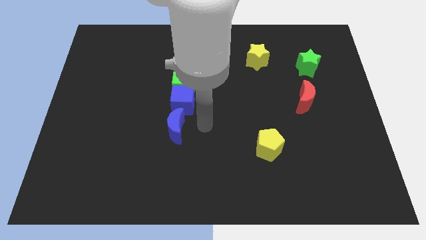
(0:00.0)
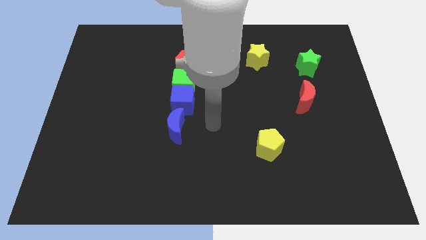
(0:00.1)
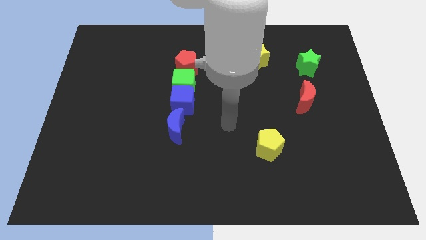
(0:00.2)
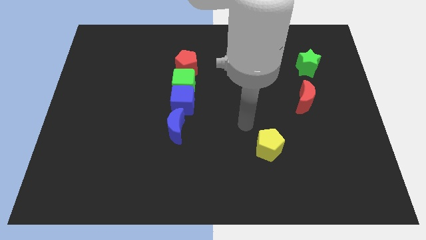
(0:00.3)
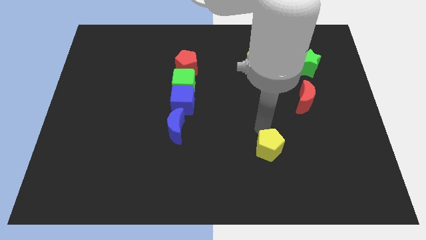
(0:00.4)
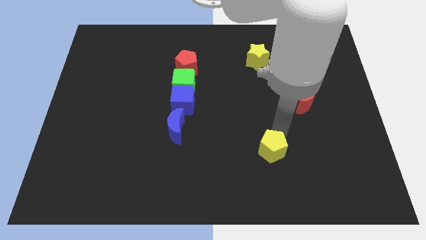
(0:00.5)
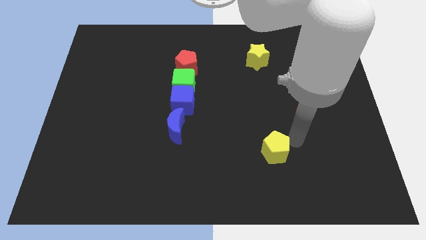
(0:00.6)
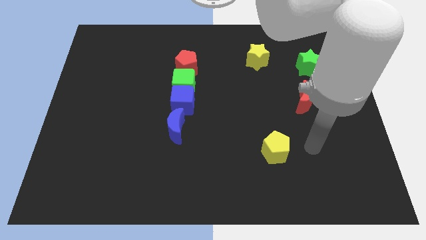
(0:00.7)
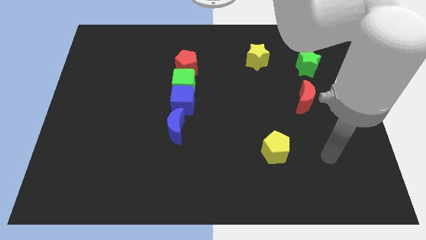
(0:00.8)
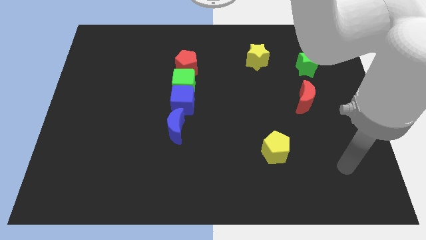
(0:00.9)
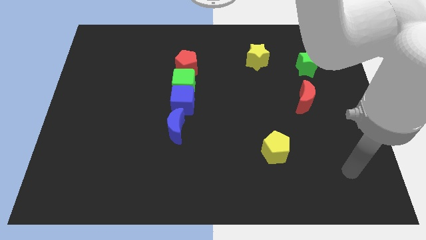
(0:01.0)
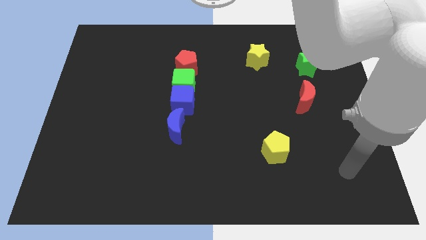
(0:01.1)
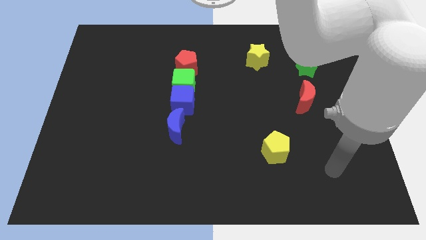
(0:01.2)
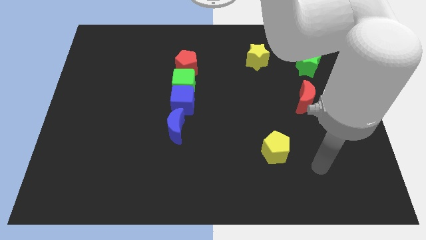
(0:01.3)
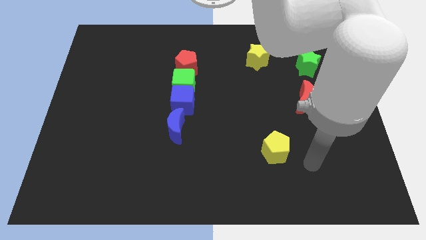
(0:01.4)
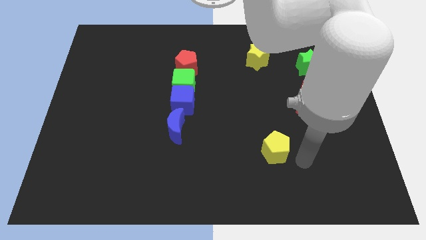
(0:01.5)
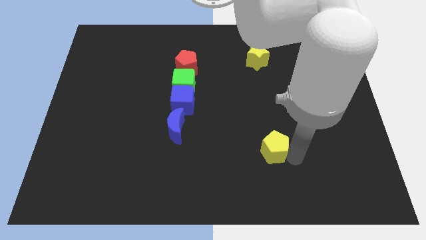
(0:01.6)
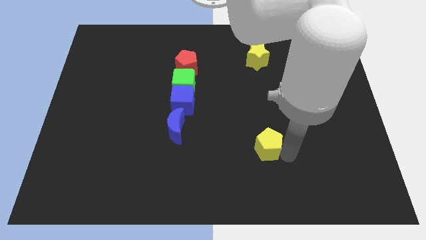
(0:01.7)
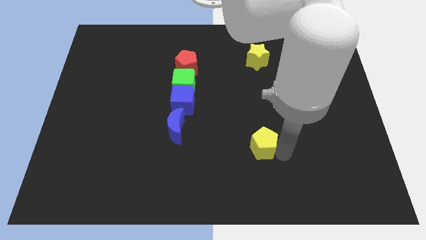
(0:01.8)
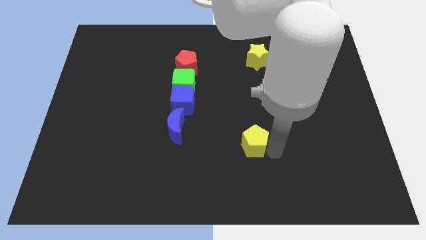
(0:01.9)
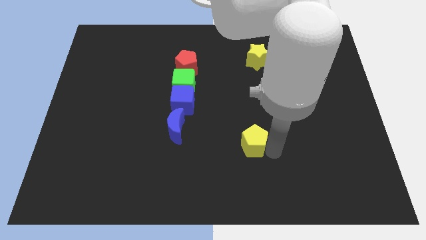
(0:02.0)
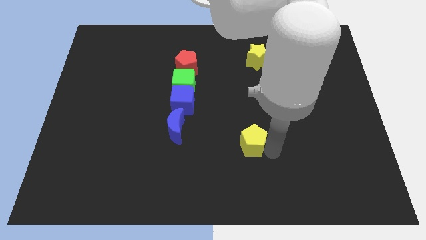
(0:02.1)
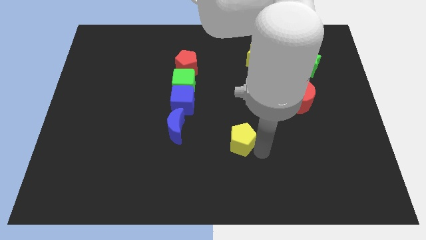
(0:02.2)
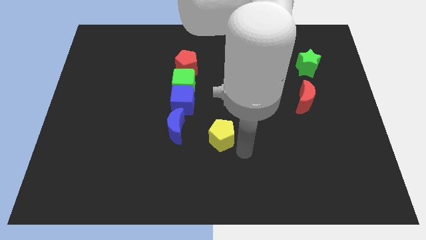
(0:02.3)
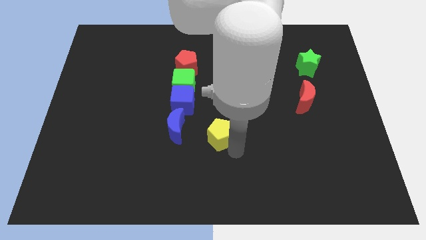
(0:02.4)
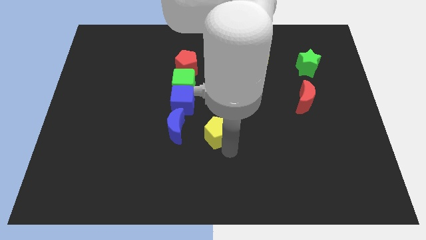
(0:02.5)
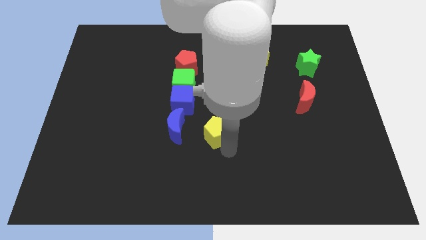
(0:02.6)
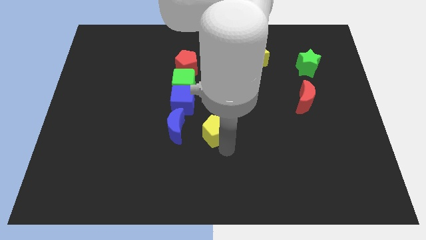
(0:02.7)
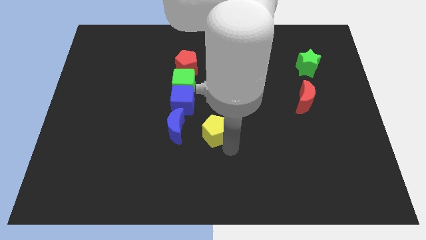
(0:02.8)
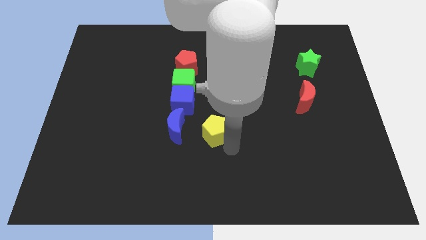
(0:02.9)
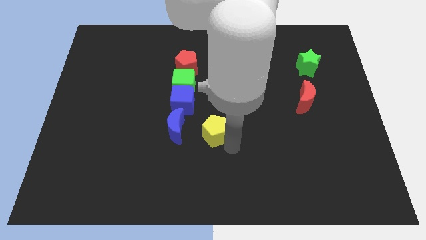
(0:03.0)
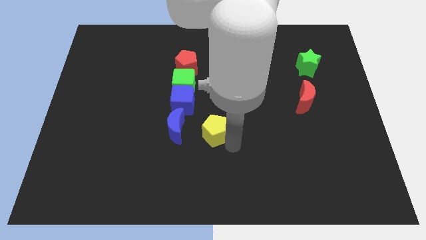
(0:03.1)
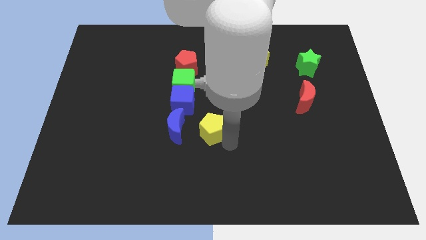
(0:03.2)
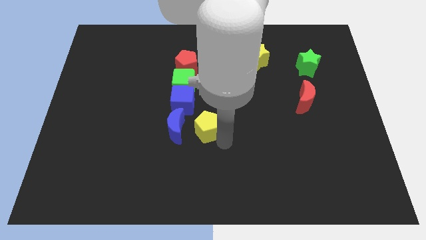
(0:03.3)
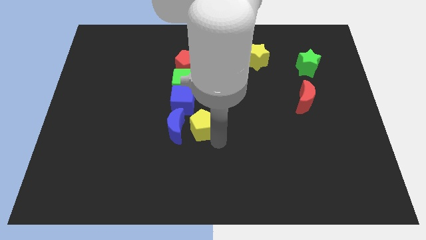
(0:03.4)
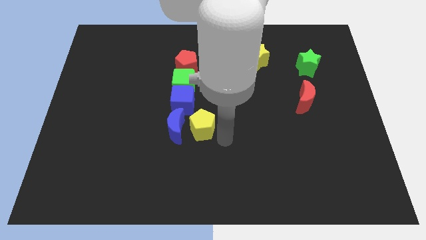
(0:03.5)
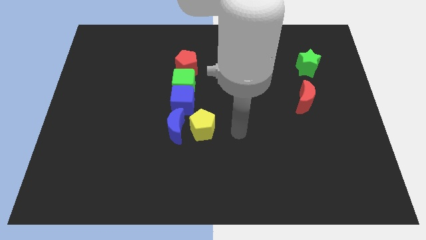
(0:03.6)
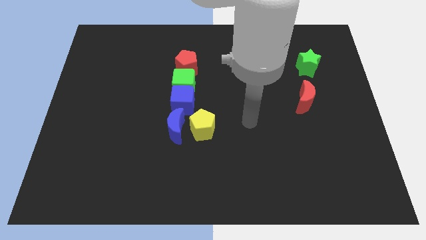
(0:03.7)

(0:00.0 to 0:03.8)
place yellow pentagon to the right of blue moon

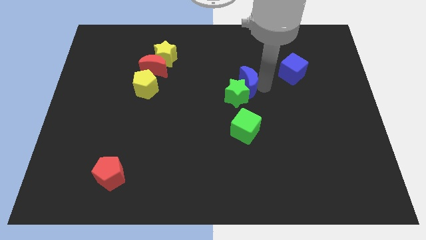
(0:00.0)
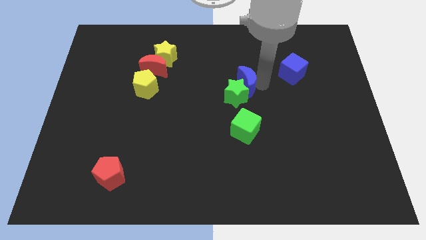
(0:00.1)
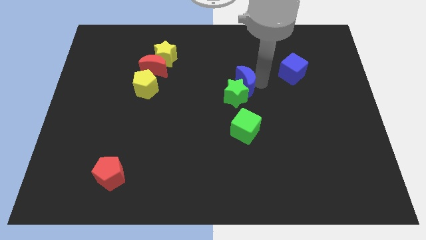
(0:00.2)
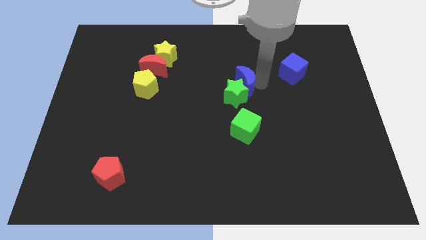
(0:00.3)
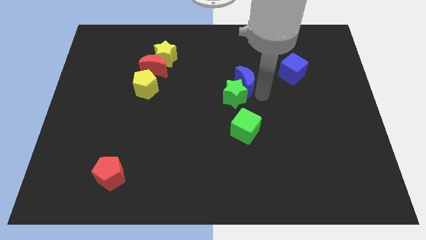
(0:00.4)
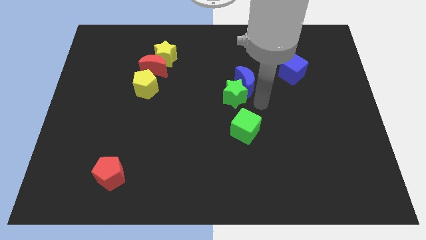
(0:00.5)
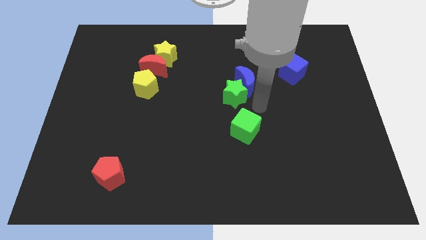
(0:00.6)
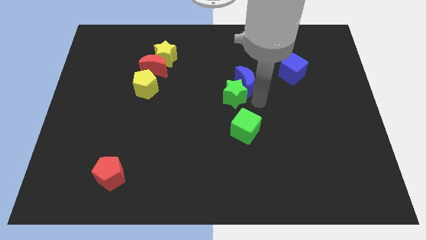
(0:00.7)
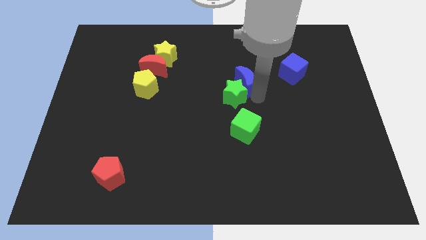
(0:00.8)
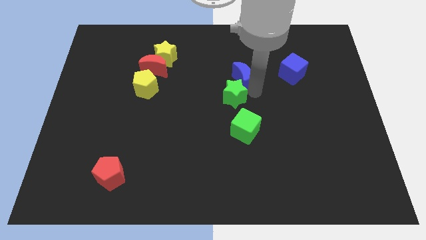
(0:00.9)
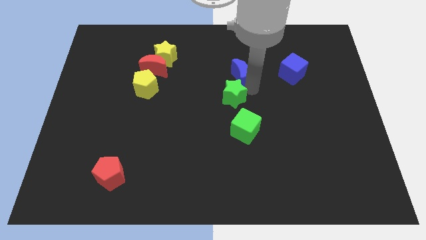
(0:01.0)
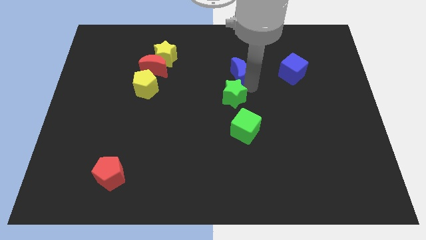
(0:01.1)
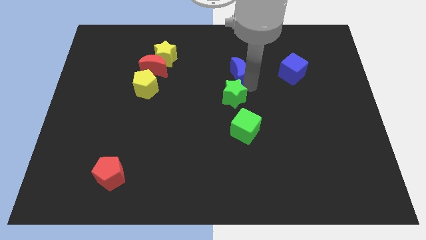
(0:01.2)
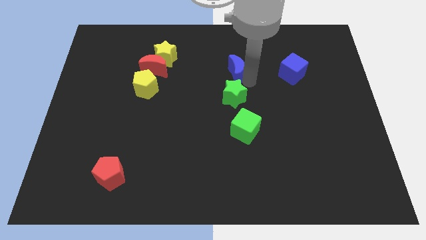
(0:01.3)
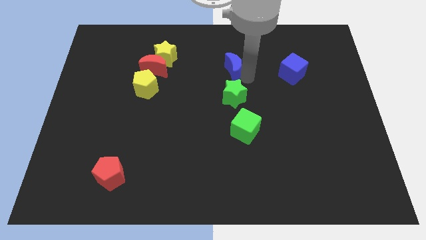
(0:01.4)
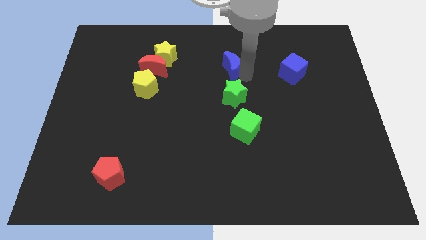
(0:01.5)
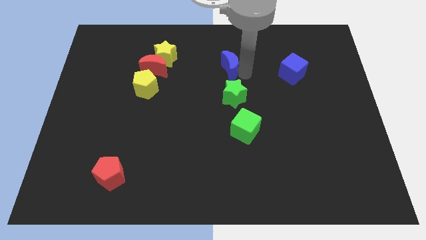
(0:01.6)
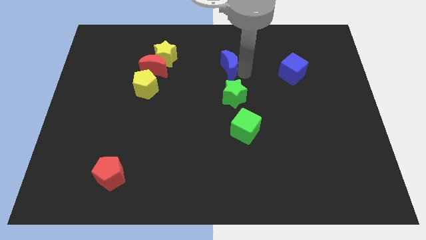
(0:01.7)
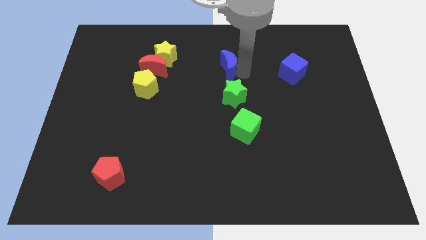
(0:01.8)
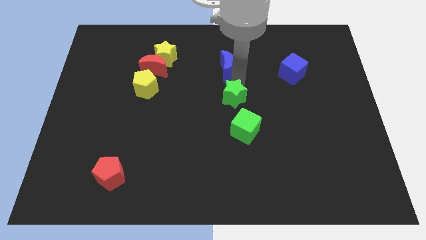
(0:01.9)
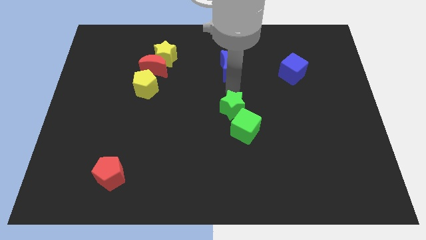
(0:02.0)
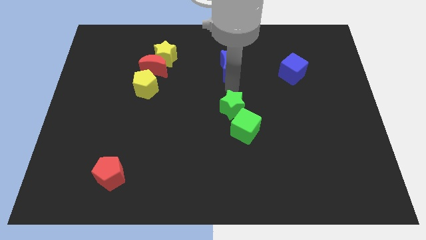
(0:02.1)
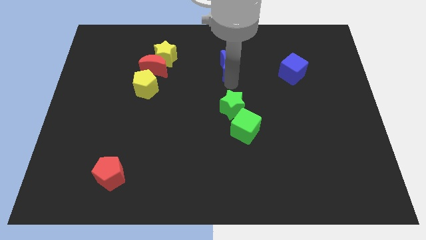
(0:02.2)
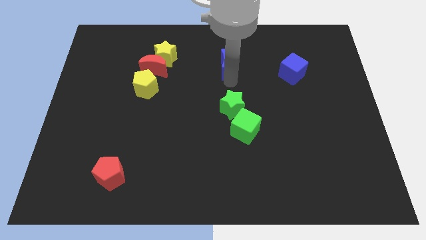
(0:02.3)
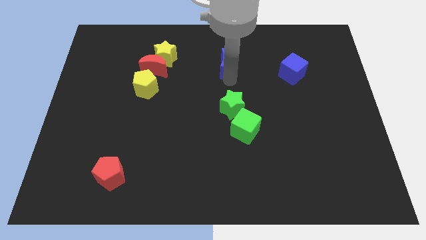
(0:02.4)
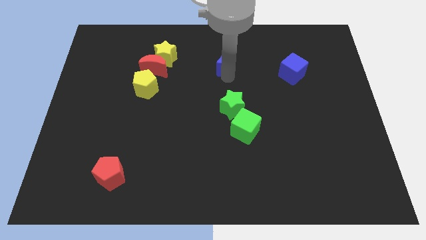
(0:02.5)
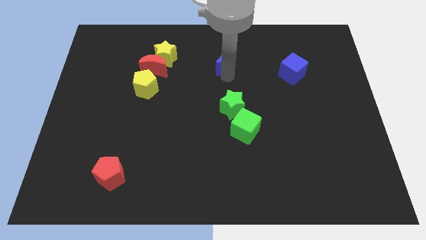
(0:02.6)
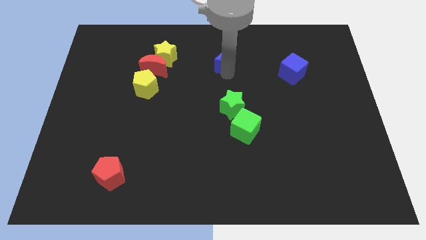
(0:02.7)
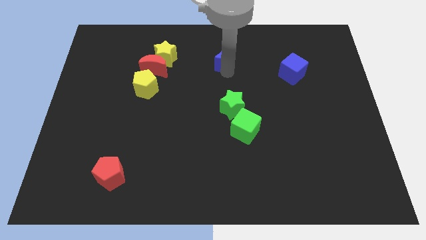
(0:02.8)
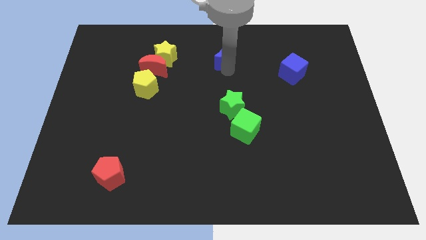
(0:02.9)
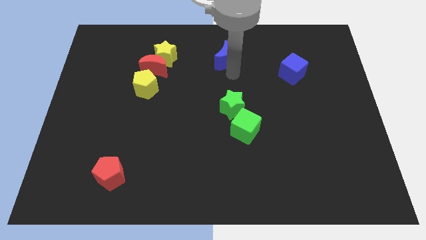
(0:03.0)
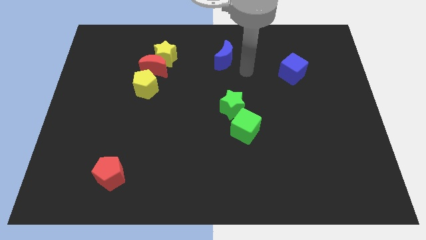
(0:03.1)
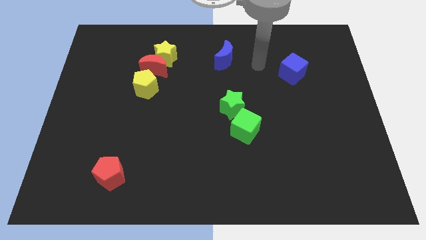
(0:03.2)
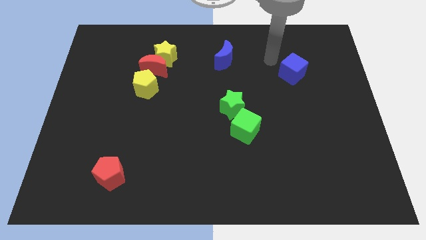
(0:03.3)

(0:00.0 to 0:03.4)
separate the green star and the blue crescent

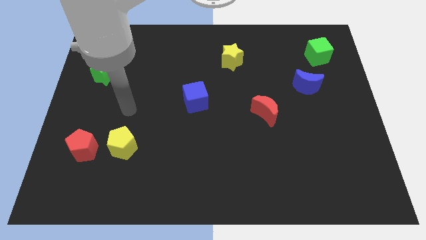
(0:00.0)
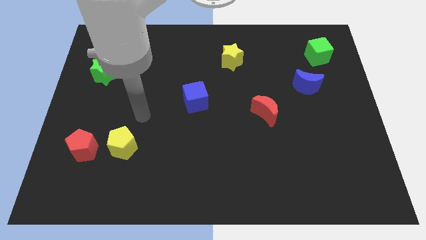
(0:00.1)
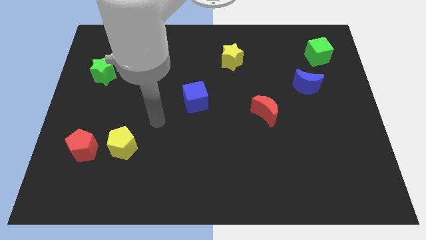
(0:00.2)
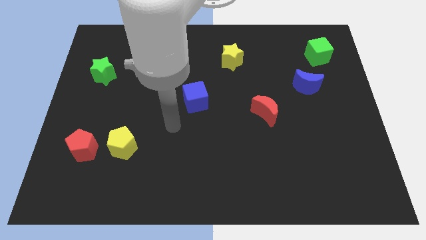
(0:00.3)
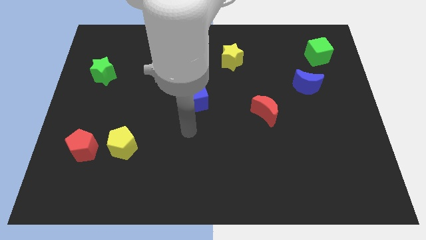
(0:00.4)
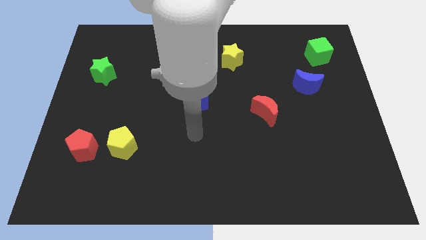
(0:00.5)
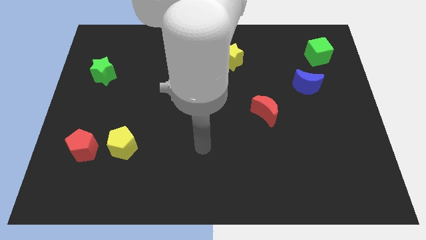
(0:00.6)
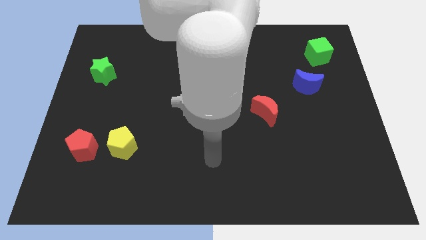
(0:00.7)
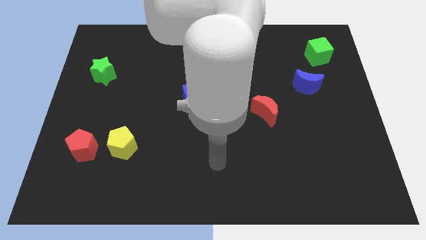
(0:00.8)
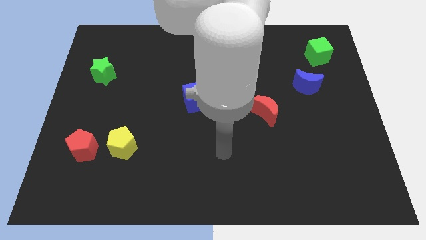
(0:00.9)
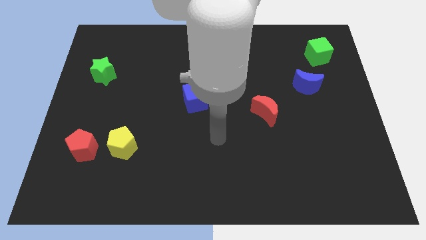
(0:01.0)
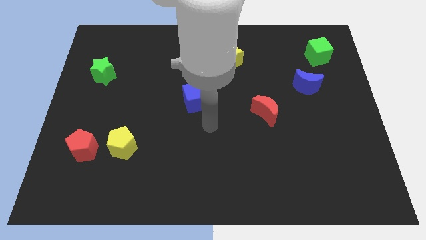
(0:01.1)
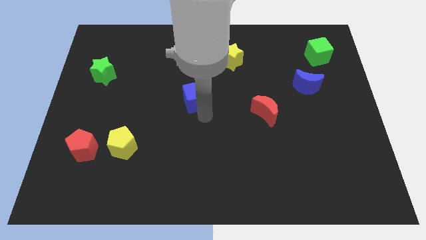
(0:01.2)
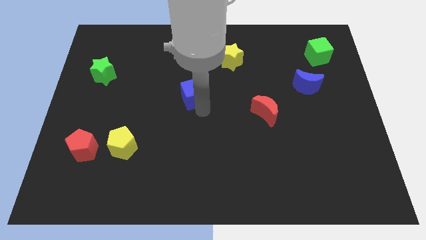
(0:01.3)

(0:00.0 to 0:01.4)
touch the bottom of blue cube

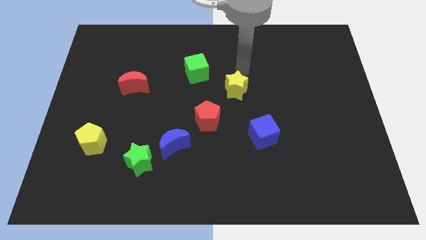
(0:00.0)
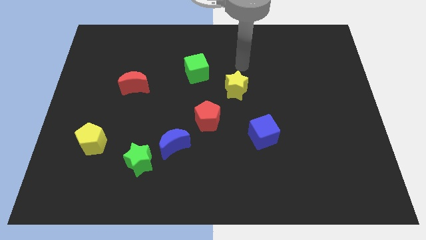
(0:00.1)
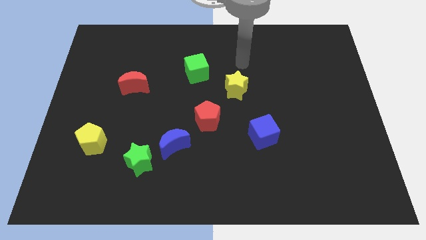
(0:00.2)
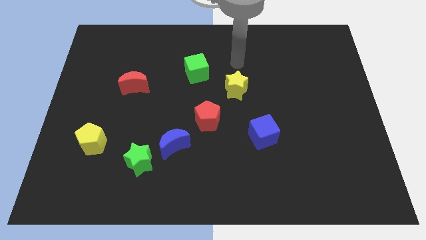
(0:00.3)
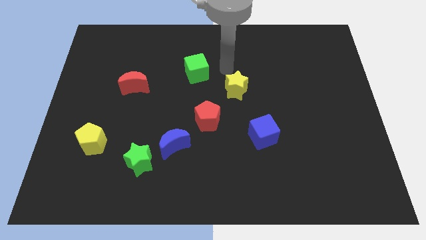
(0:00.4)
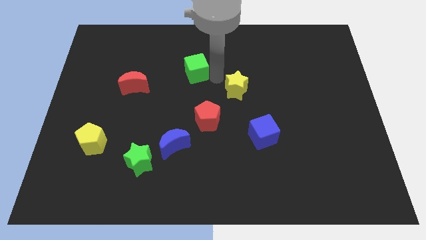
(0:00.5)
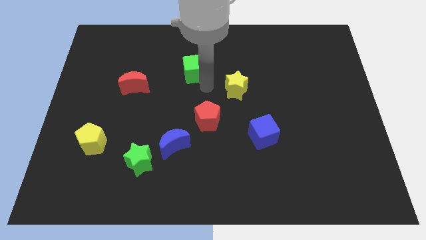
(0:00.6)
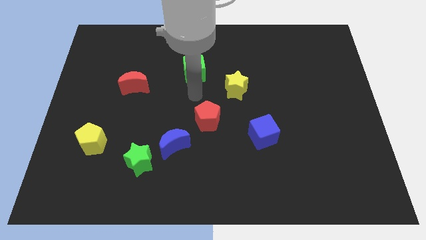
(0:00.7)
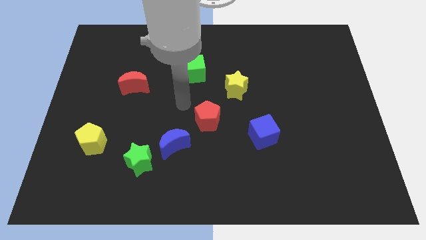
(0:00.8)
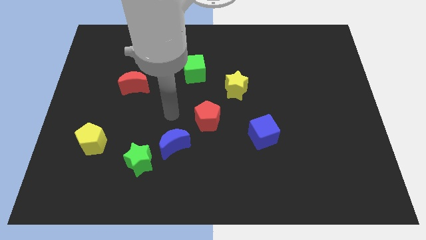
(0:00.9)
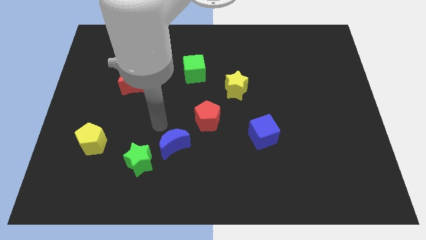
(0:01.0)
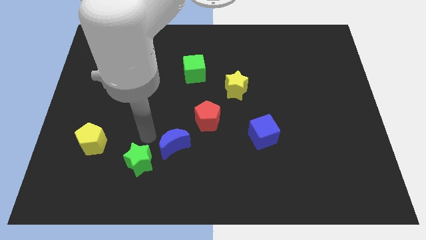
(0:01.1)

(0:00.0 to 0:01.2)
move the green cube slightly
